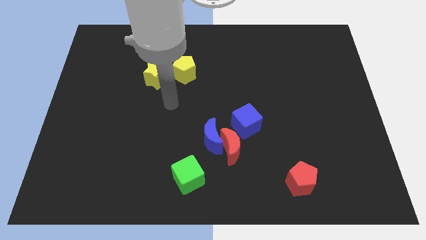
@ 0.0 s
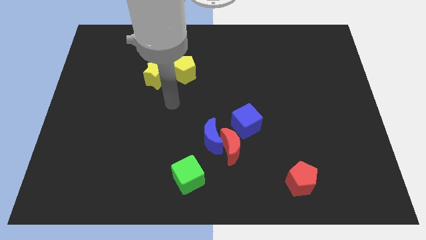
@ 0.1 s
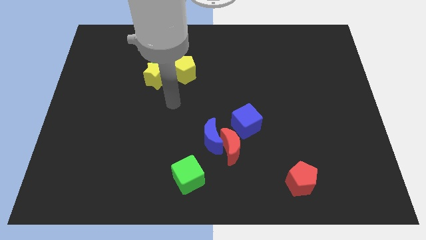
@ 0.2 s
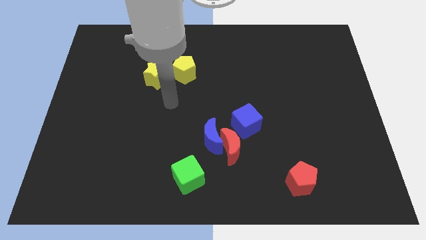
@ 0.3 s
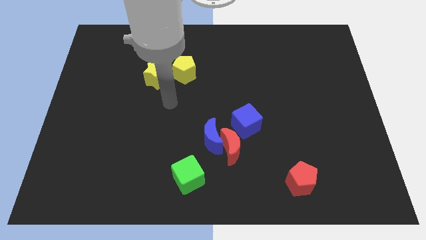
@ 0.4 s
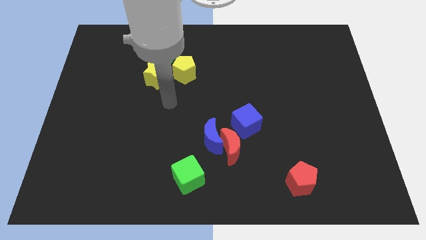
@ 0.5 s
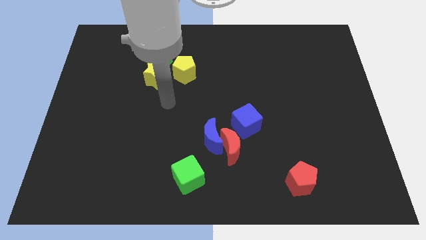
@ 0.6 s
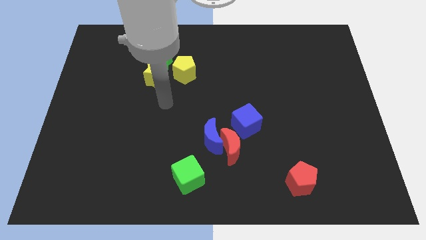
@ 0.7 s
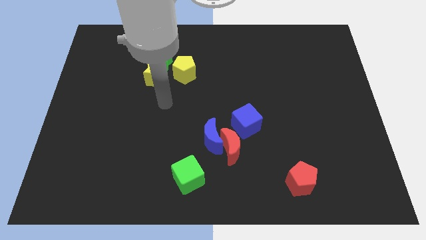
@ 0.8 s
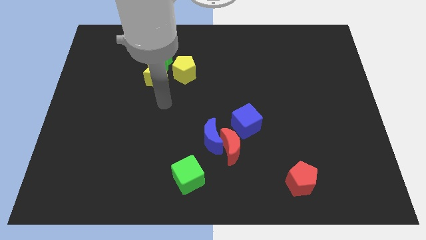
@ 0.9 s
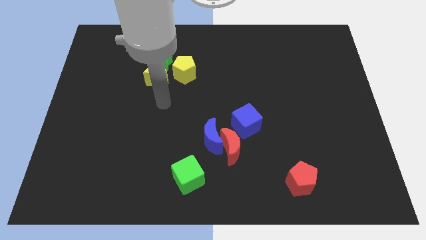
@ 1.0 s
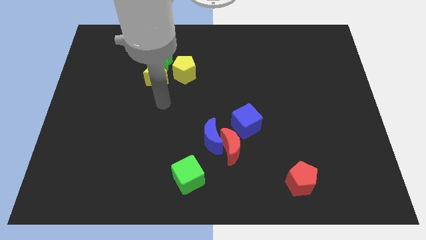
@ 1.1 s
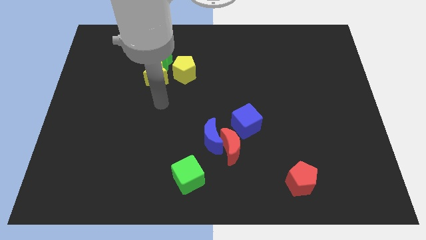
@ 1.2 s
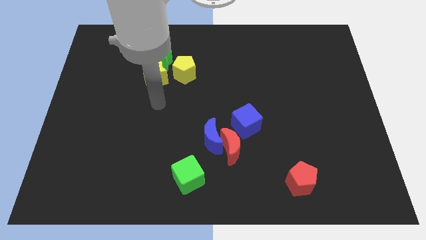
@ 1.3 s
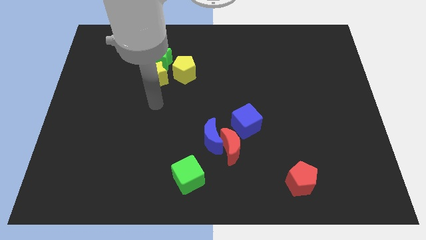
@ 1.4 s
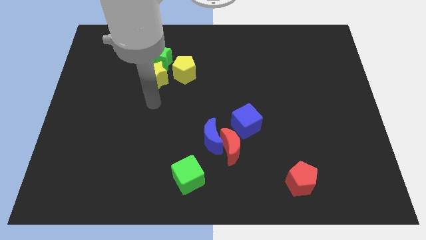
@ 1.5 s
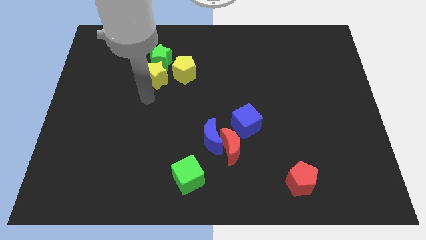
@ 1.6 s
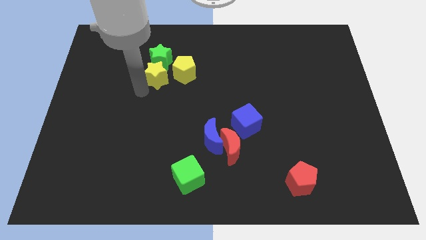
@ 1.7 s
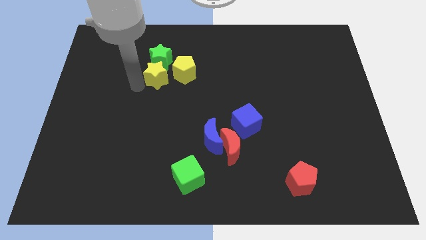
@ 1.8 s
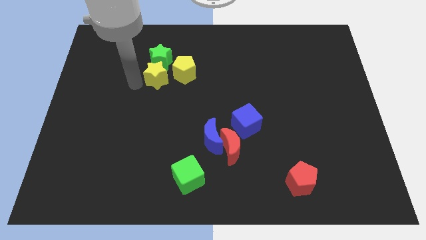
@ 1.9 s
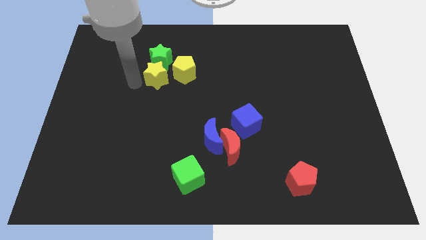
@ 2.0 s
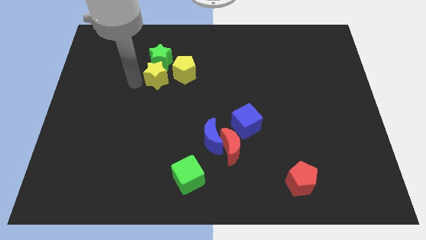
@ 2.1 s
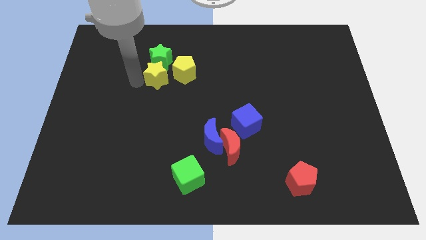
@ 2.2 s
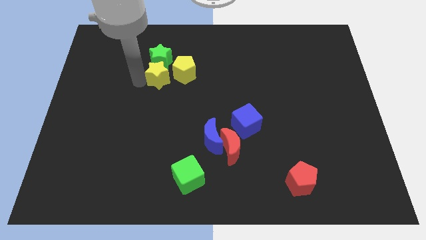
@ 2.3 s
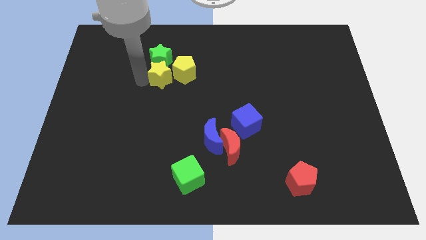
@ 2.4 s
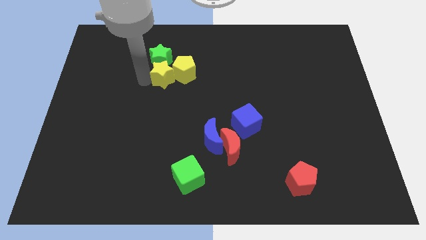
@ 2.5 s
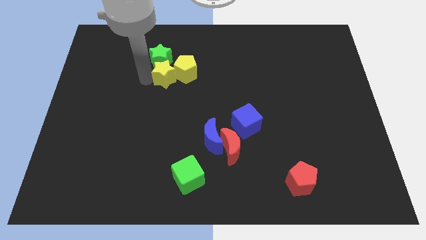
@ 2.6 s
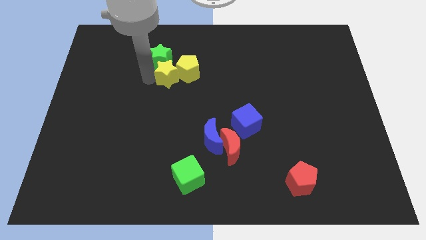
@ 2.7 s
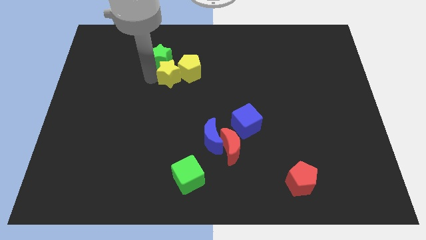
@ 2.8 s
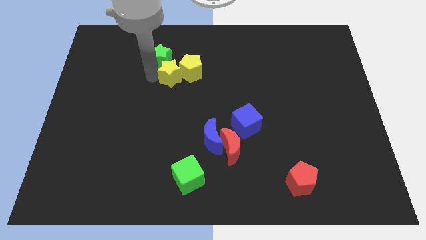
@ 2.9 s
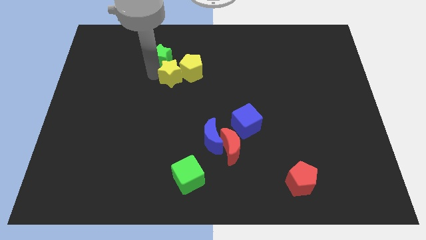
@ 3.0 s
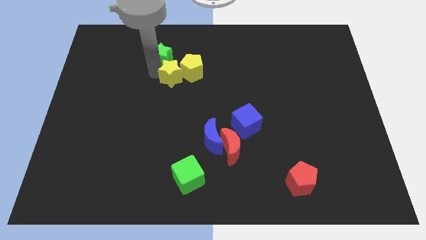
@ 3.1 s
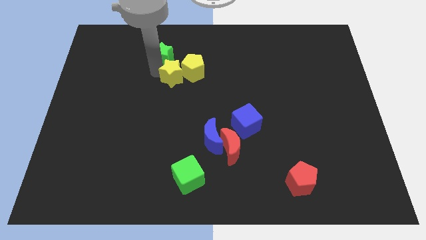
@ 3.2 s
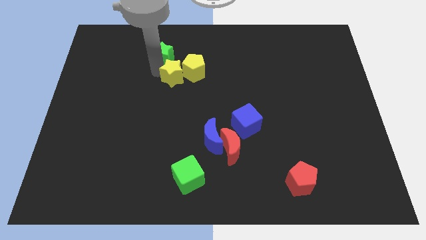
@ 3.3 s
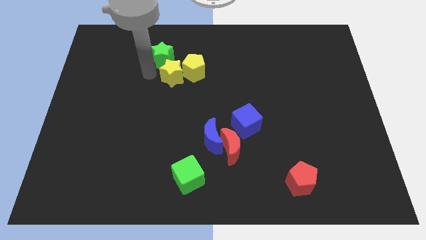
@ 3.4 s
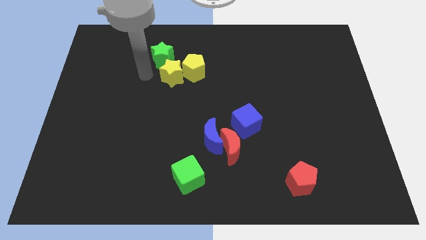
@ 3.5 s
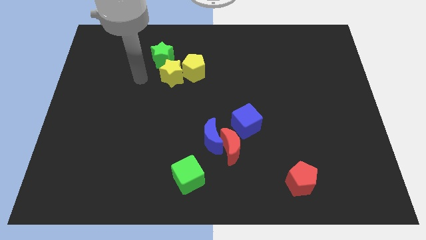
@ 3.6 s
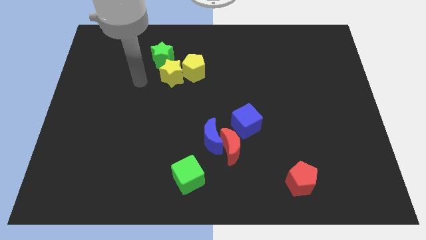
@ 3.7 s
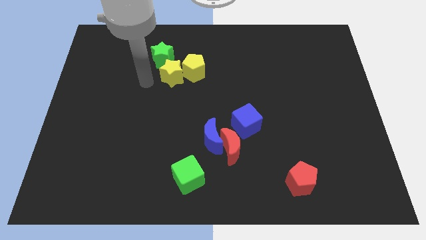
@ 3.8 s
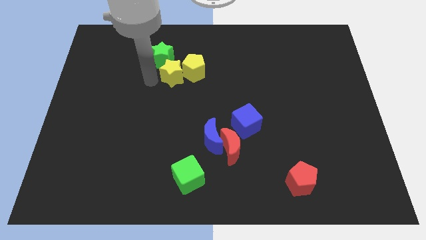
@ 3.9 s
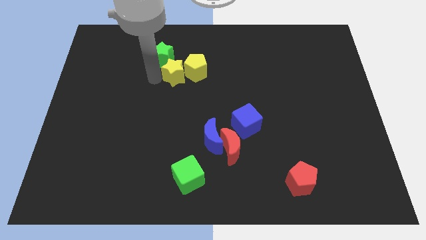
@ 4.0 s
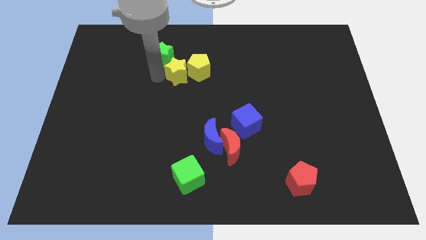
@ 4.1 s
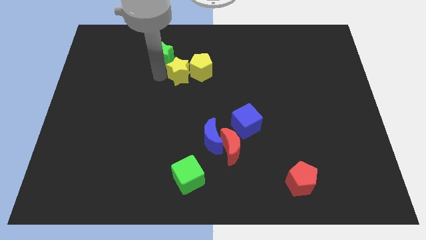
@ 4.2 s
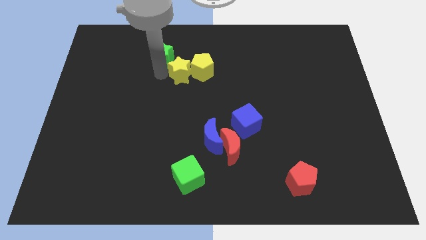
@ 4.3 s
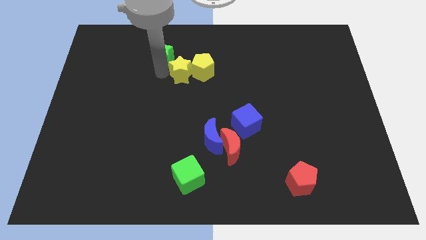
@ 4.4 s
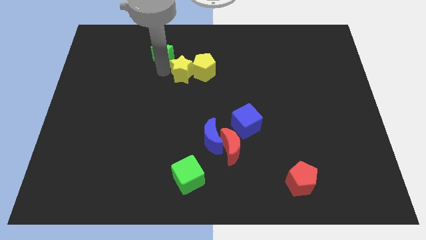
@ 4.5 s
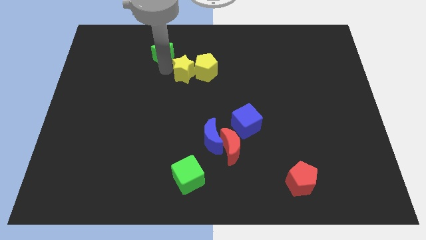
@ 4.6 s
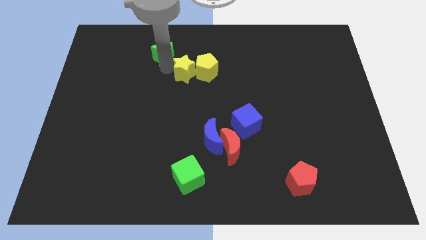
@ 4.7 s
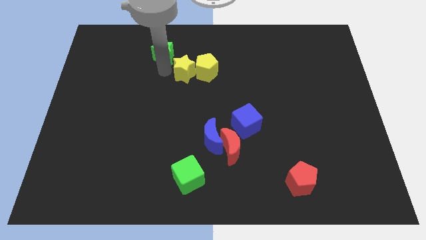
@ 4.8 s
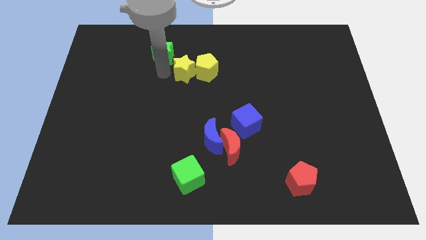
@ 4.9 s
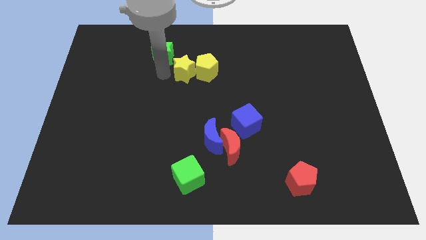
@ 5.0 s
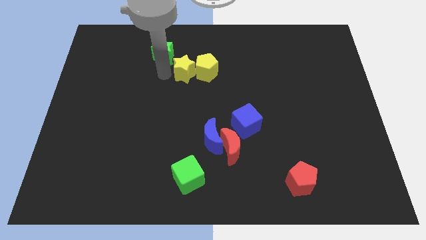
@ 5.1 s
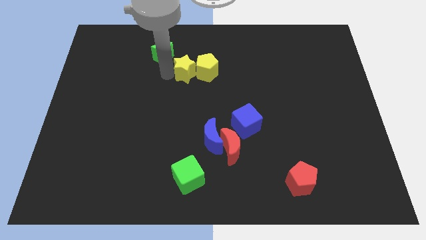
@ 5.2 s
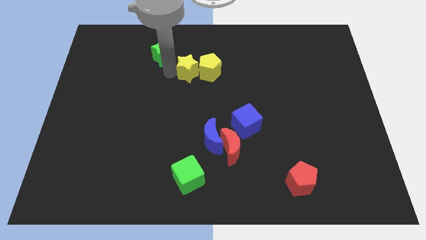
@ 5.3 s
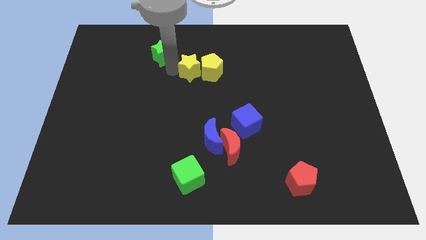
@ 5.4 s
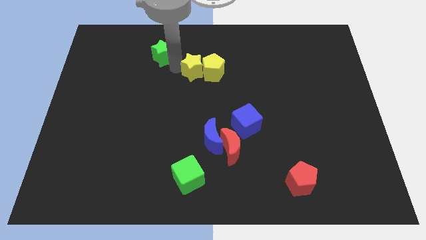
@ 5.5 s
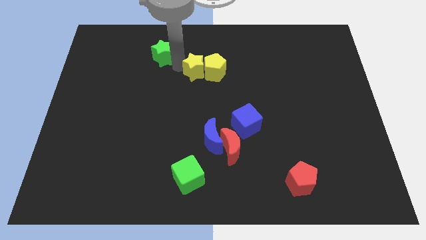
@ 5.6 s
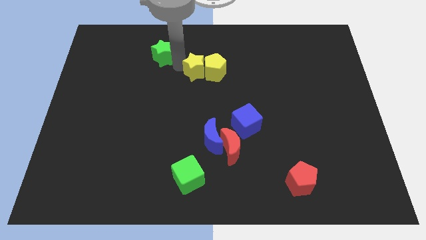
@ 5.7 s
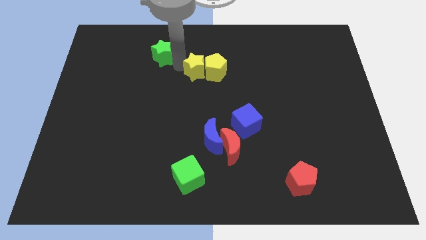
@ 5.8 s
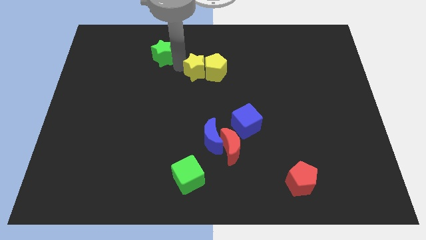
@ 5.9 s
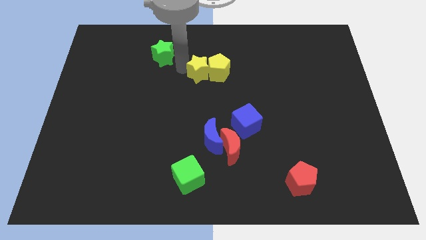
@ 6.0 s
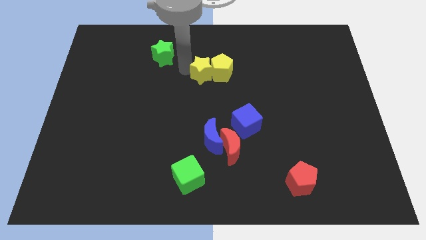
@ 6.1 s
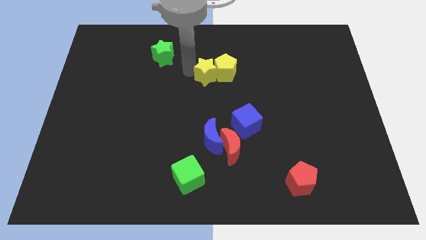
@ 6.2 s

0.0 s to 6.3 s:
place the yellow blocks in the top center of the board

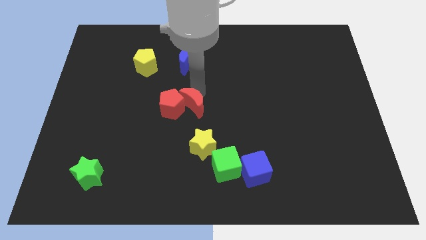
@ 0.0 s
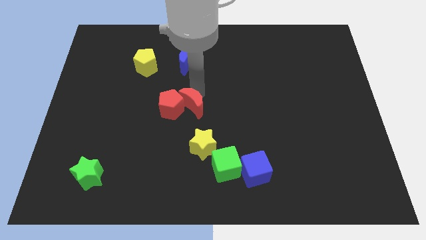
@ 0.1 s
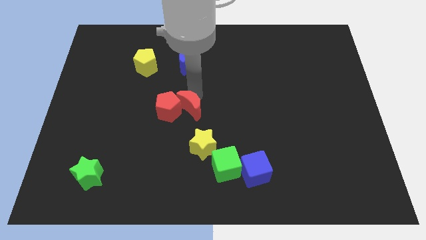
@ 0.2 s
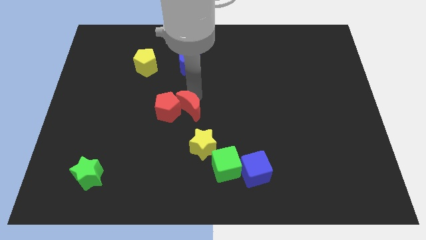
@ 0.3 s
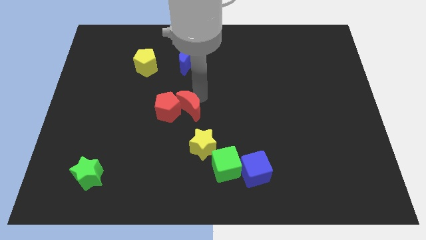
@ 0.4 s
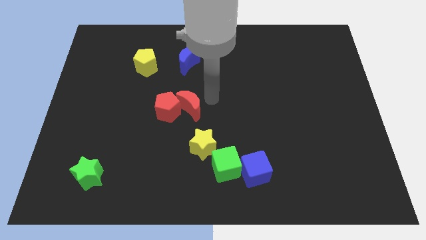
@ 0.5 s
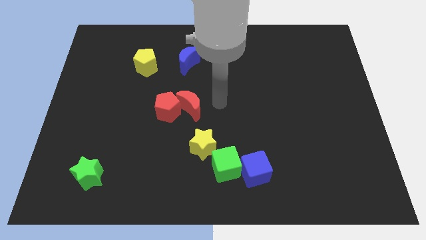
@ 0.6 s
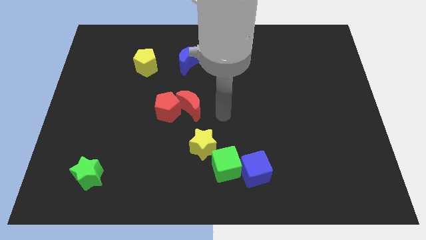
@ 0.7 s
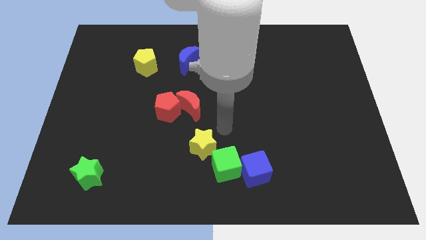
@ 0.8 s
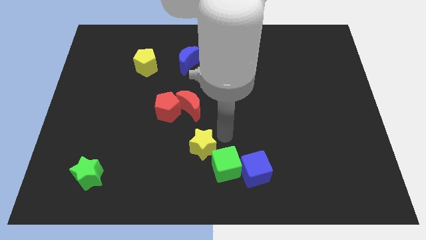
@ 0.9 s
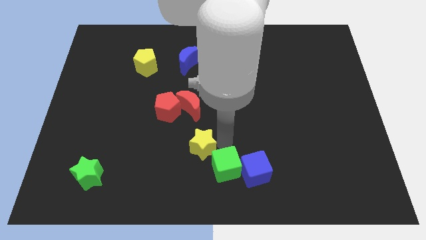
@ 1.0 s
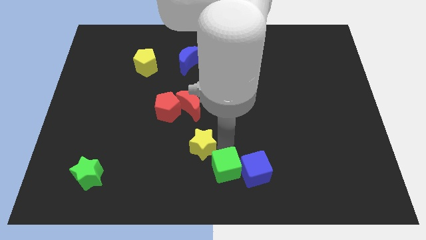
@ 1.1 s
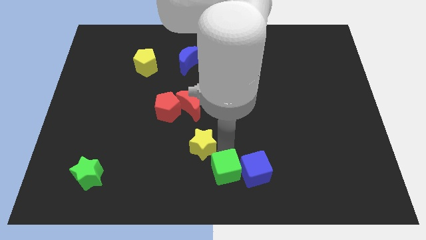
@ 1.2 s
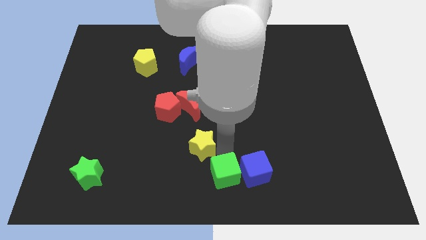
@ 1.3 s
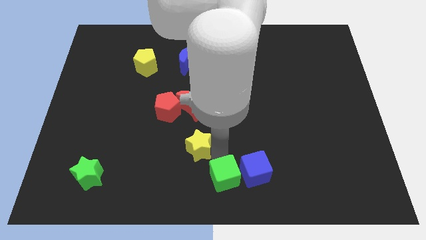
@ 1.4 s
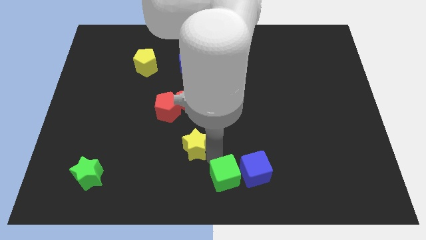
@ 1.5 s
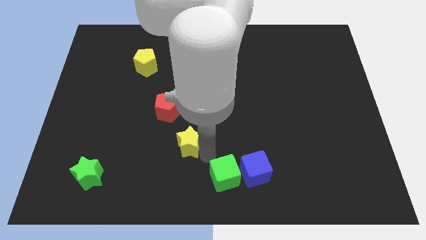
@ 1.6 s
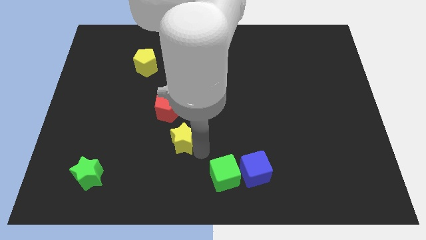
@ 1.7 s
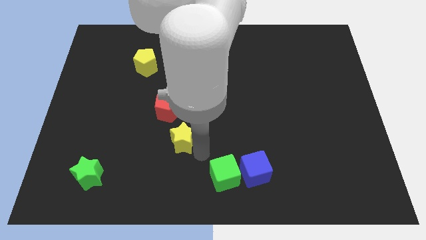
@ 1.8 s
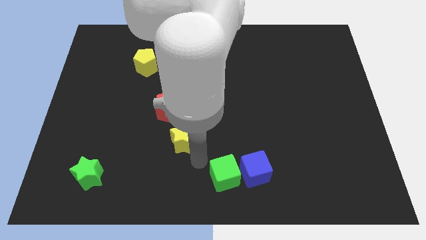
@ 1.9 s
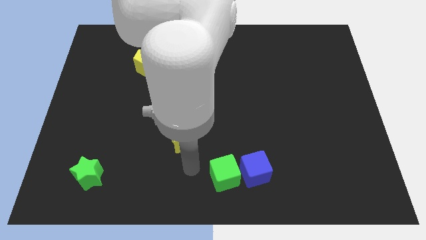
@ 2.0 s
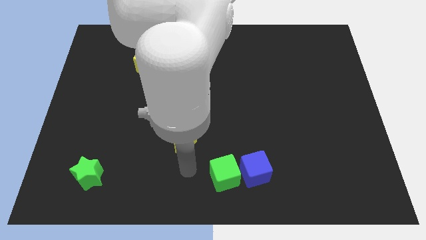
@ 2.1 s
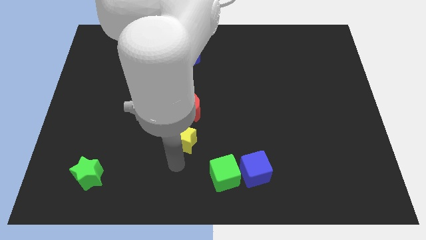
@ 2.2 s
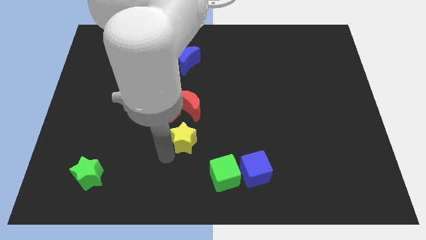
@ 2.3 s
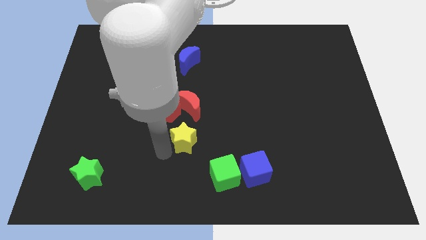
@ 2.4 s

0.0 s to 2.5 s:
place your arm towards left side of pentagon
